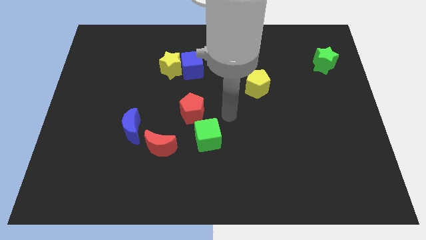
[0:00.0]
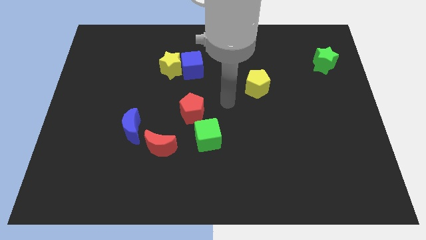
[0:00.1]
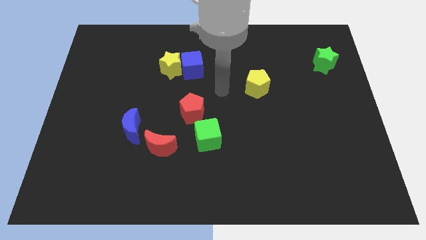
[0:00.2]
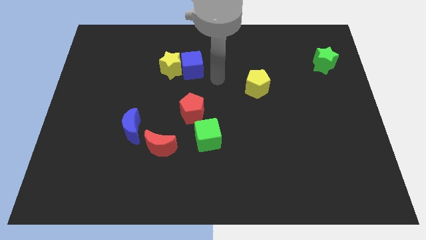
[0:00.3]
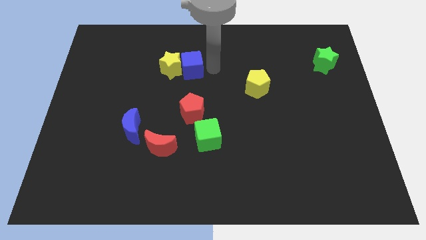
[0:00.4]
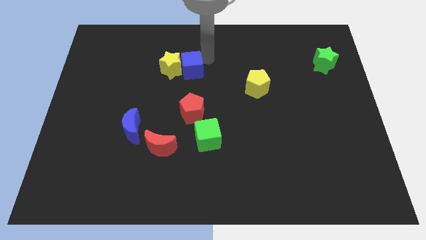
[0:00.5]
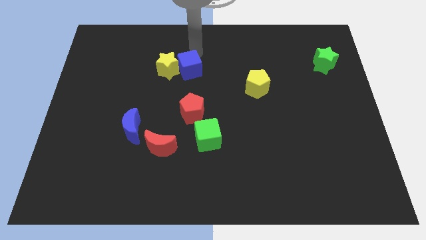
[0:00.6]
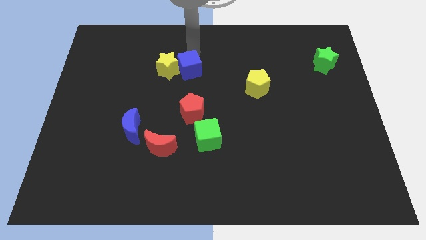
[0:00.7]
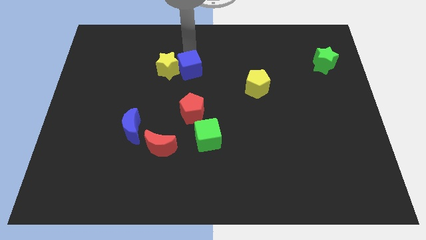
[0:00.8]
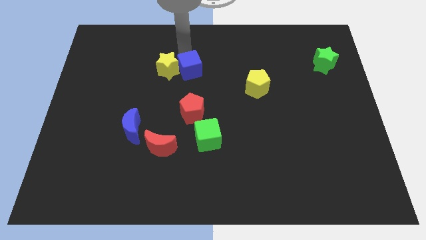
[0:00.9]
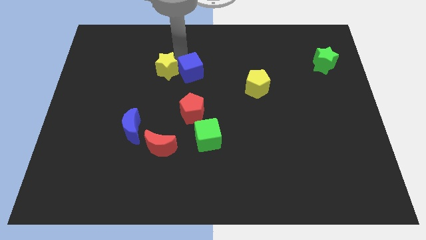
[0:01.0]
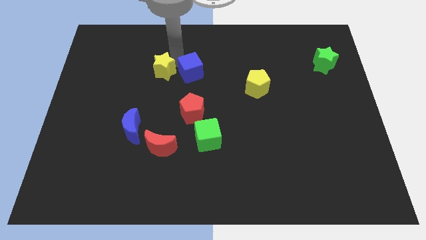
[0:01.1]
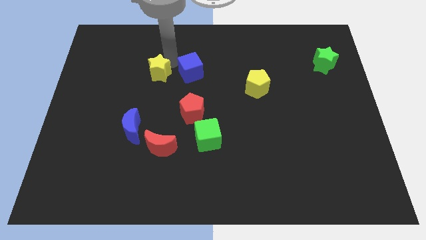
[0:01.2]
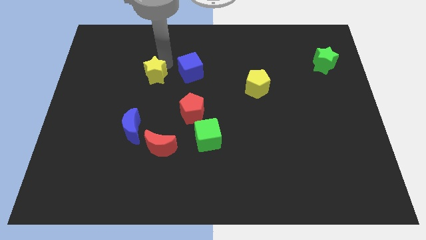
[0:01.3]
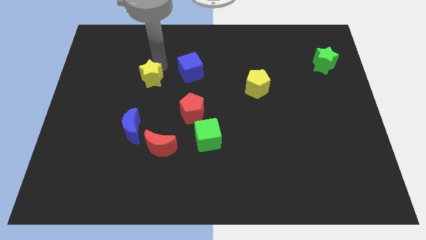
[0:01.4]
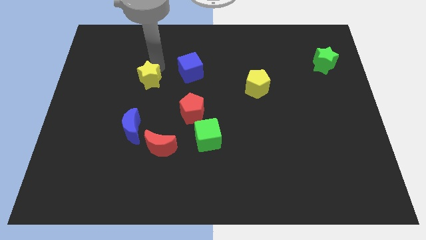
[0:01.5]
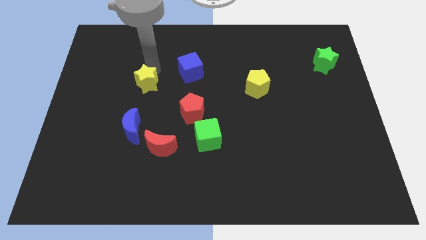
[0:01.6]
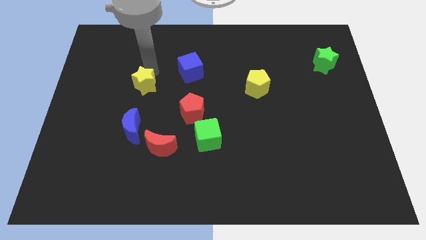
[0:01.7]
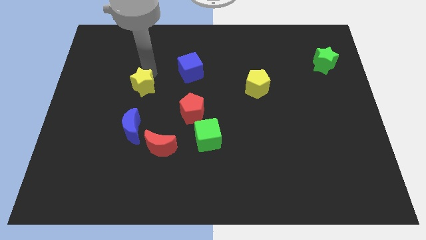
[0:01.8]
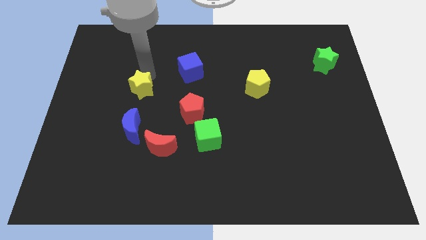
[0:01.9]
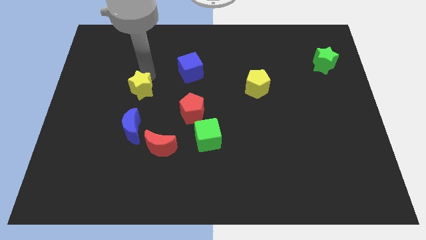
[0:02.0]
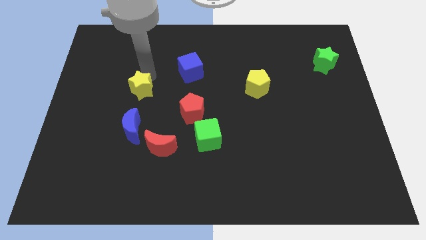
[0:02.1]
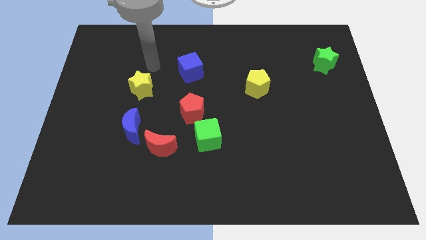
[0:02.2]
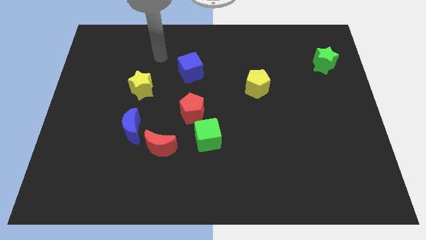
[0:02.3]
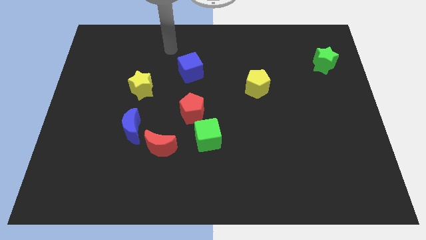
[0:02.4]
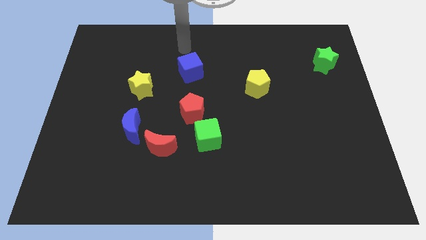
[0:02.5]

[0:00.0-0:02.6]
separate the blue cube and the yellow star

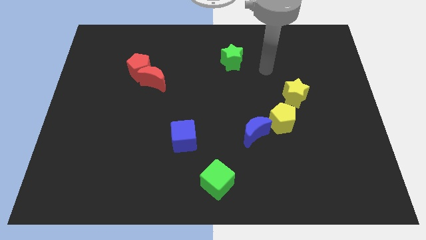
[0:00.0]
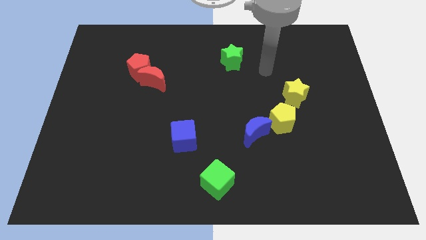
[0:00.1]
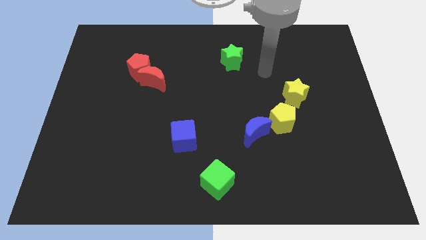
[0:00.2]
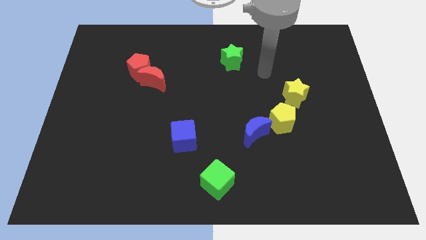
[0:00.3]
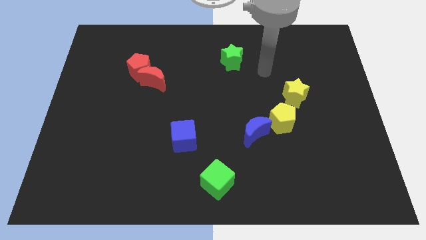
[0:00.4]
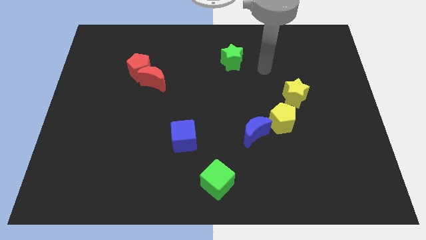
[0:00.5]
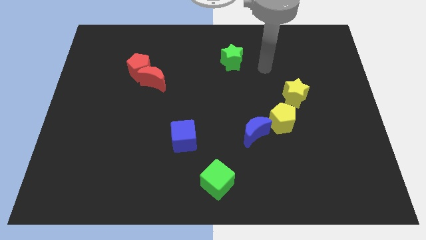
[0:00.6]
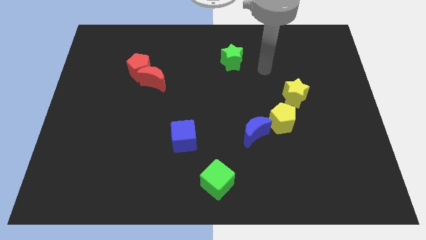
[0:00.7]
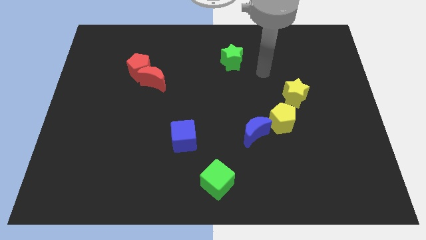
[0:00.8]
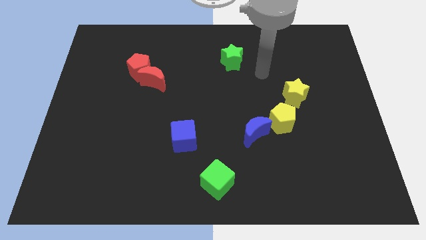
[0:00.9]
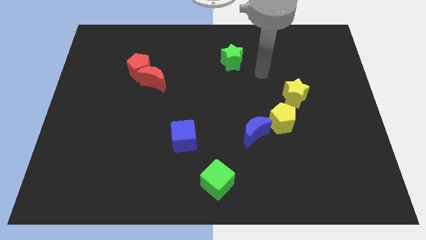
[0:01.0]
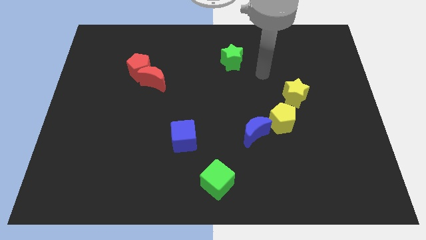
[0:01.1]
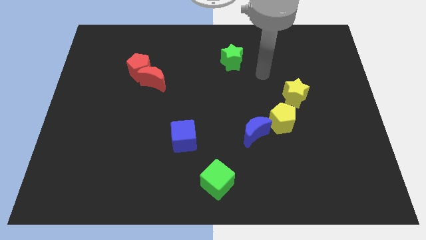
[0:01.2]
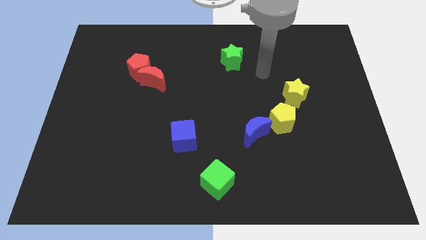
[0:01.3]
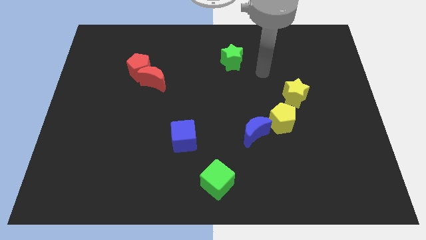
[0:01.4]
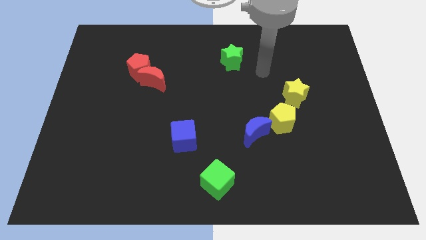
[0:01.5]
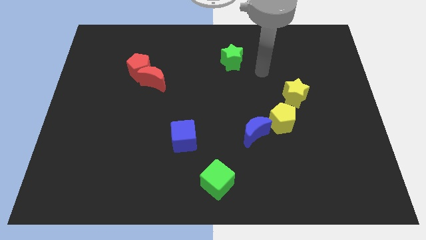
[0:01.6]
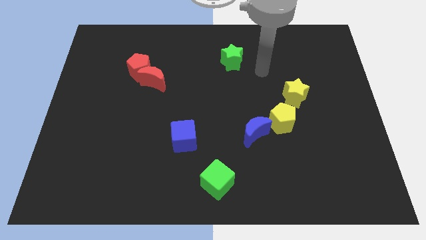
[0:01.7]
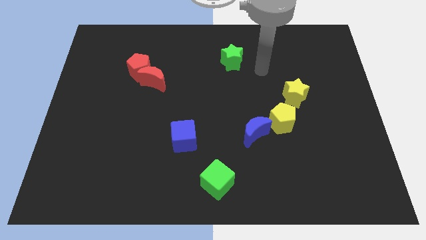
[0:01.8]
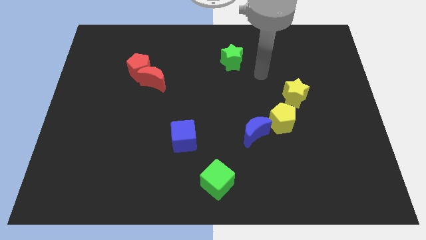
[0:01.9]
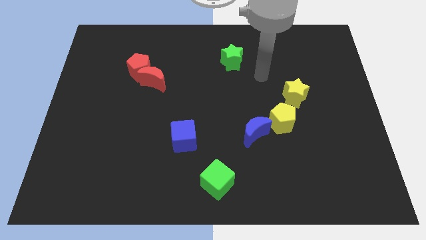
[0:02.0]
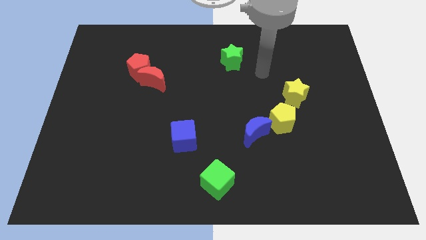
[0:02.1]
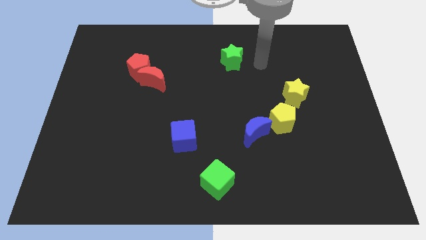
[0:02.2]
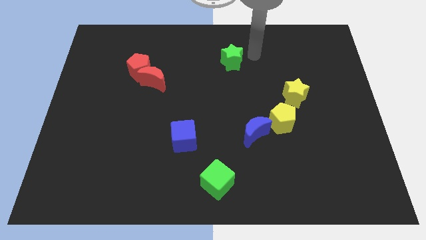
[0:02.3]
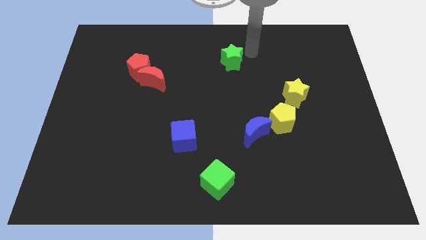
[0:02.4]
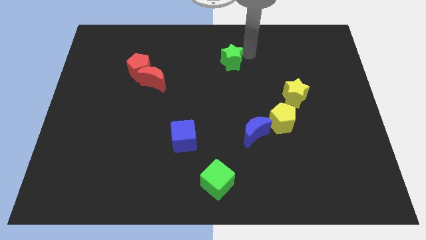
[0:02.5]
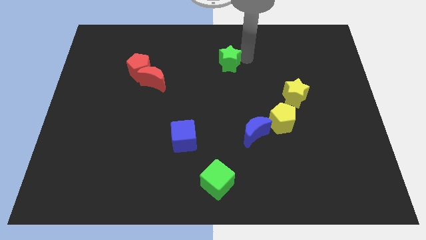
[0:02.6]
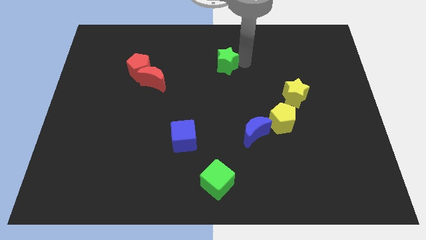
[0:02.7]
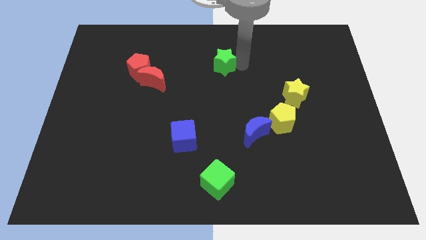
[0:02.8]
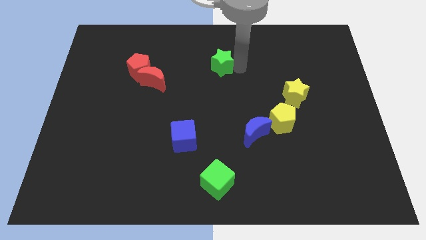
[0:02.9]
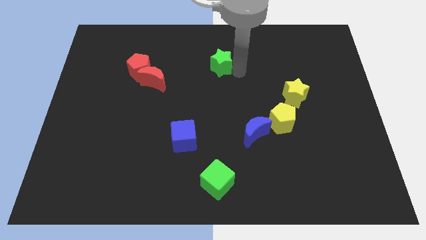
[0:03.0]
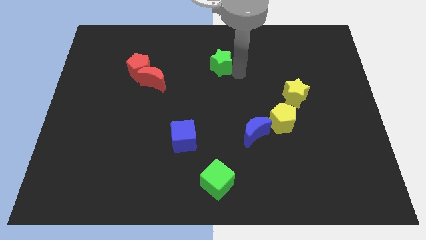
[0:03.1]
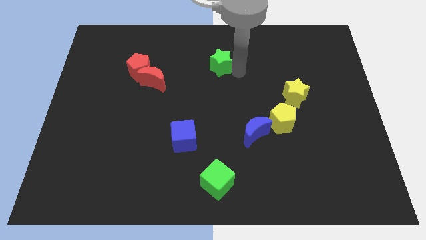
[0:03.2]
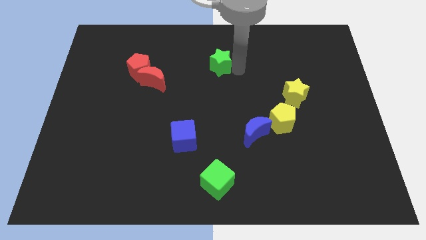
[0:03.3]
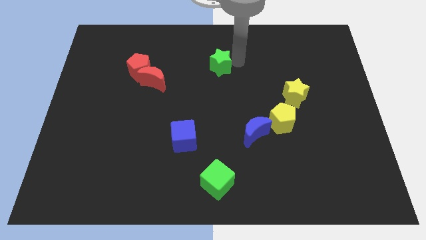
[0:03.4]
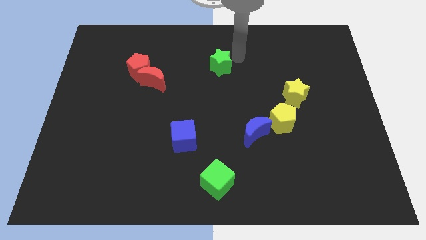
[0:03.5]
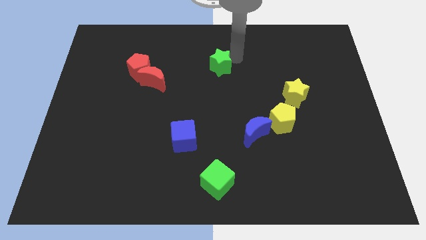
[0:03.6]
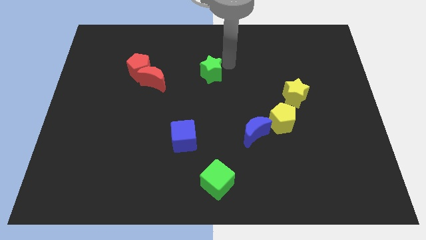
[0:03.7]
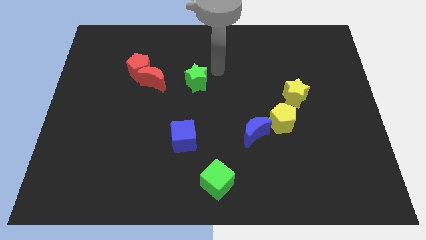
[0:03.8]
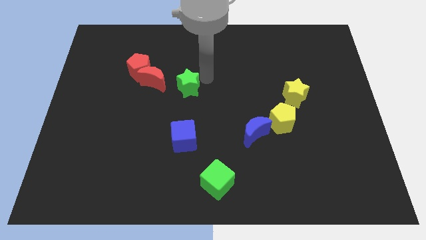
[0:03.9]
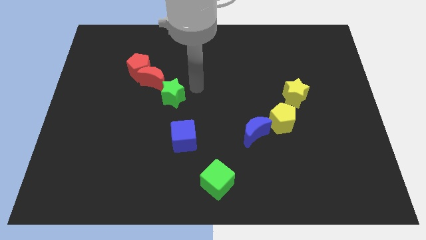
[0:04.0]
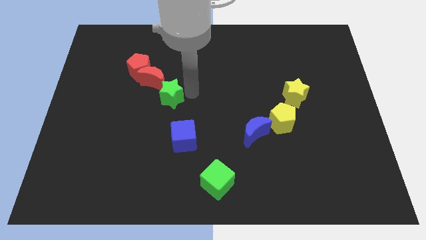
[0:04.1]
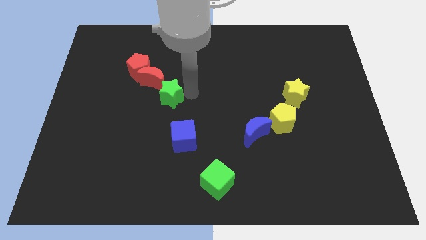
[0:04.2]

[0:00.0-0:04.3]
move the green star bottom right to red moon

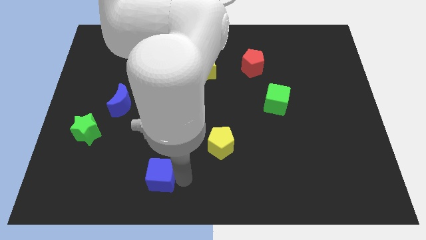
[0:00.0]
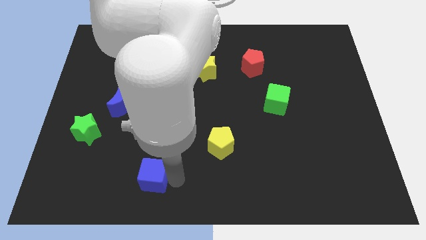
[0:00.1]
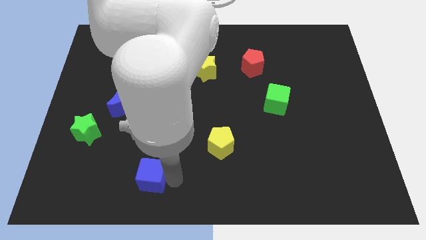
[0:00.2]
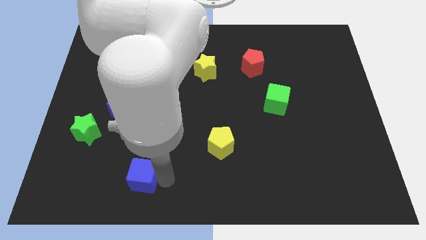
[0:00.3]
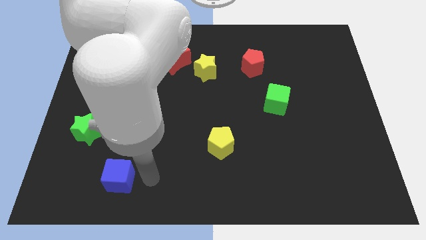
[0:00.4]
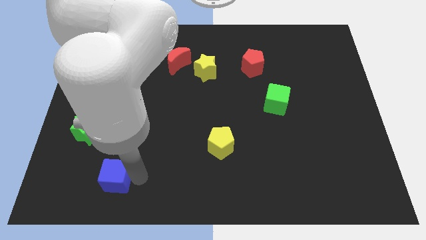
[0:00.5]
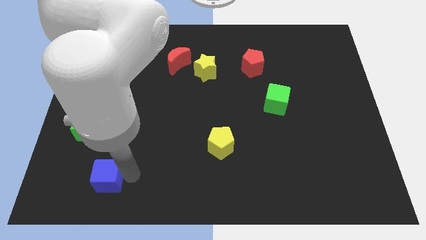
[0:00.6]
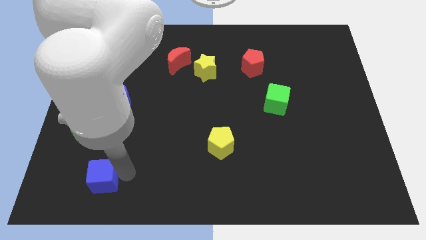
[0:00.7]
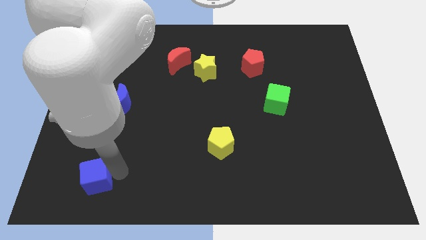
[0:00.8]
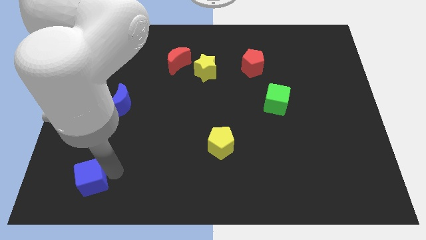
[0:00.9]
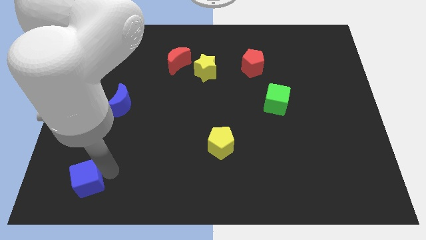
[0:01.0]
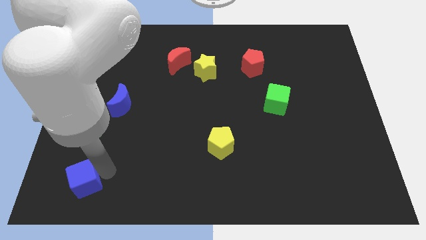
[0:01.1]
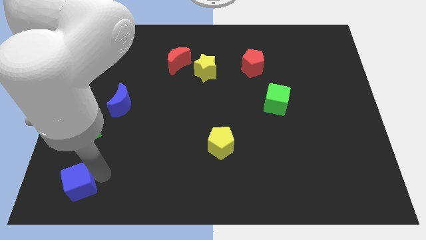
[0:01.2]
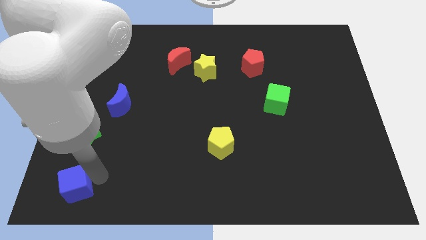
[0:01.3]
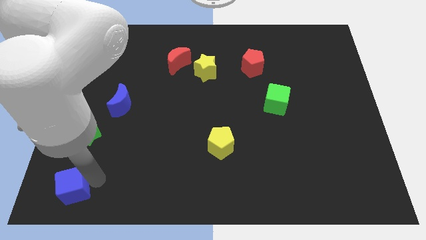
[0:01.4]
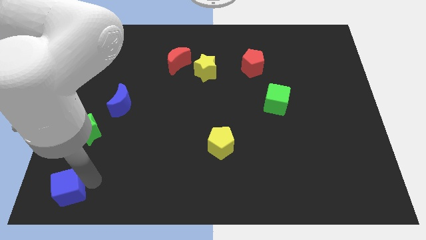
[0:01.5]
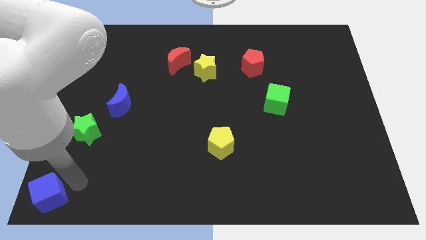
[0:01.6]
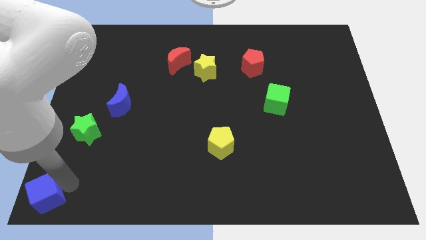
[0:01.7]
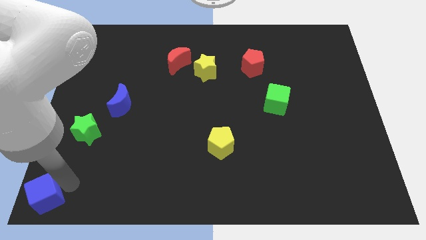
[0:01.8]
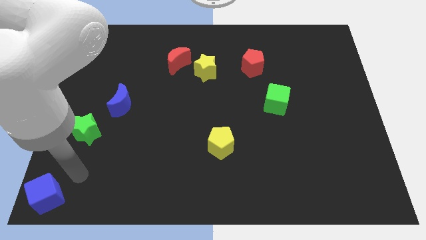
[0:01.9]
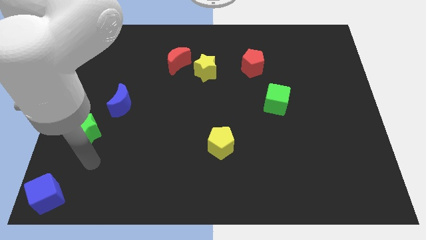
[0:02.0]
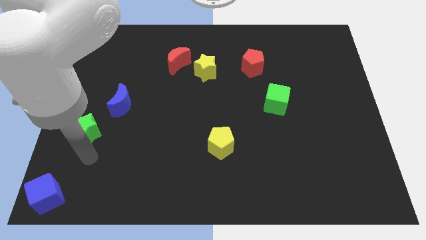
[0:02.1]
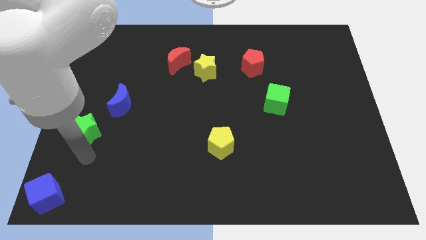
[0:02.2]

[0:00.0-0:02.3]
push the blue cube to the bottom left corner of the board
